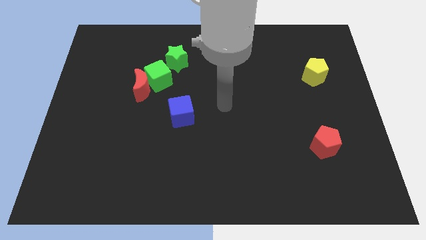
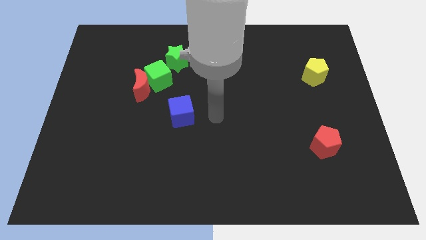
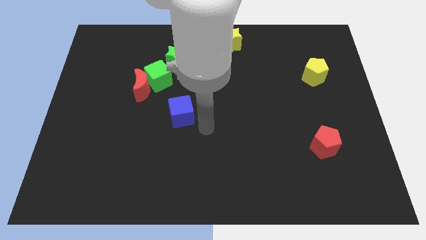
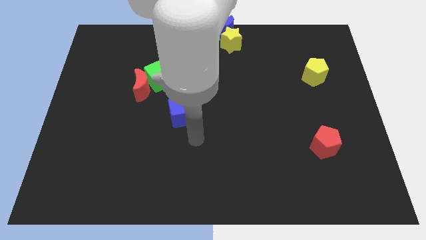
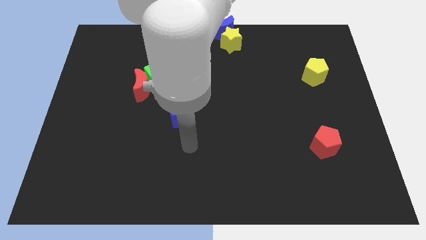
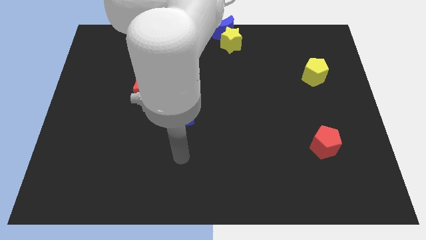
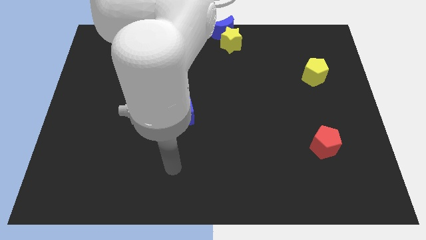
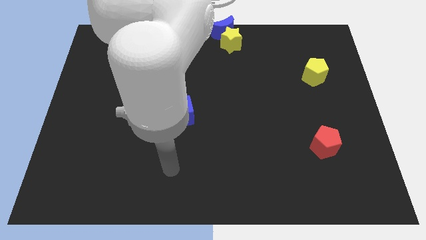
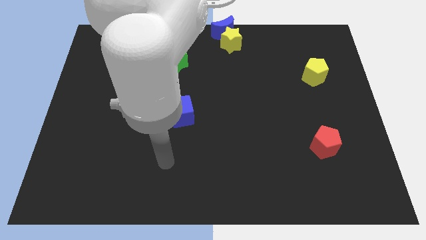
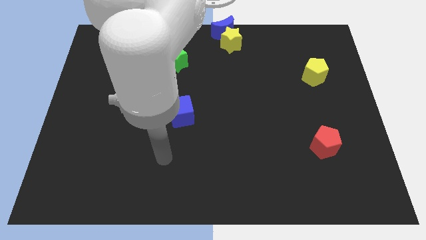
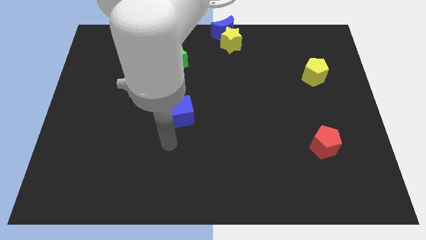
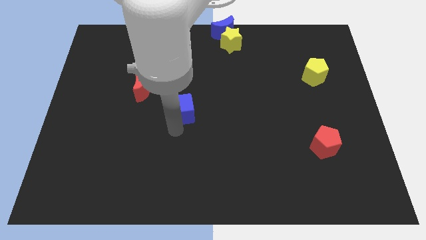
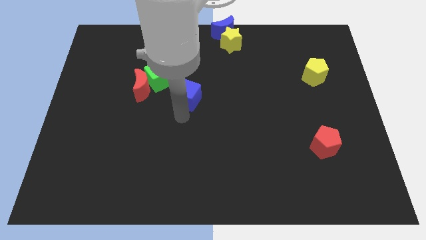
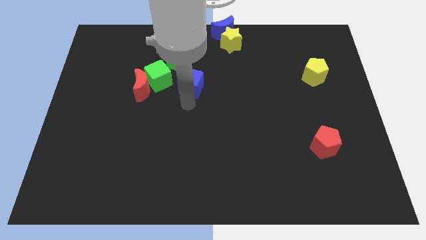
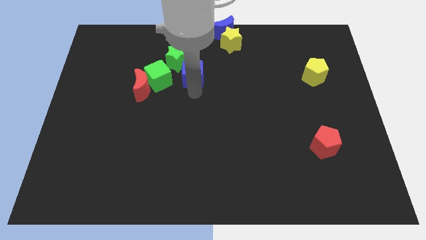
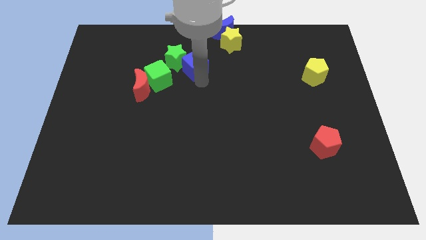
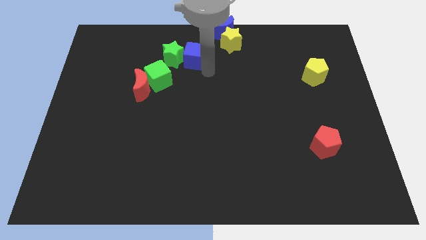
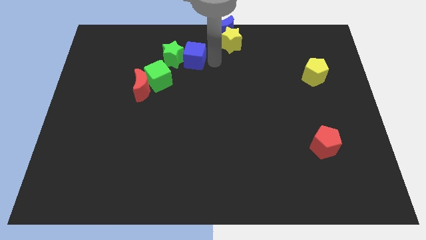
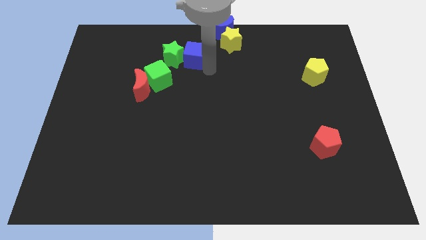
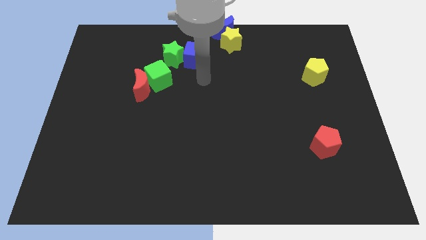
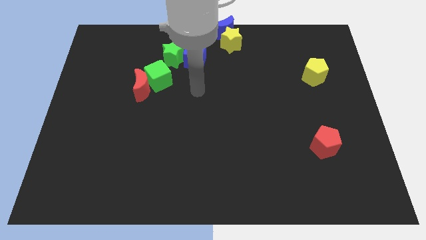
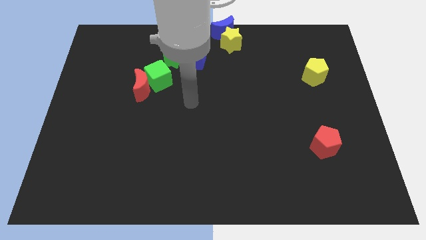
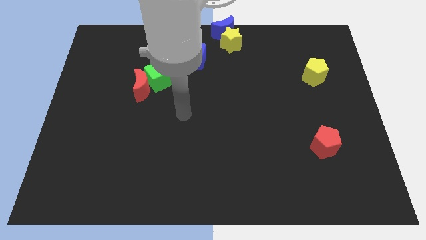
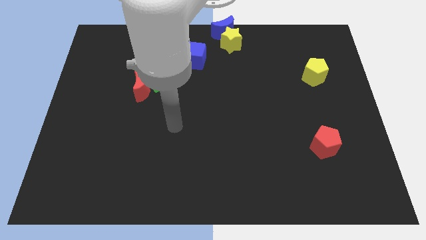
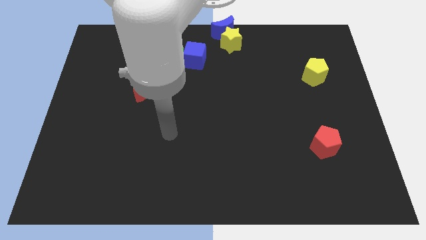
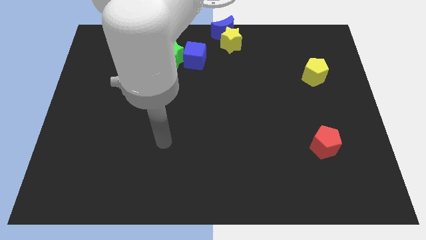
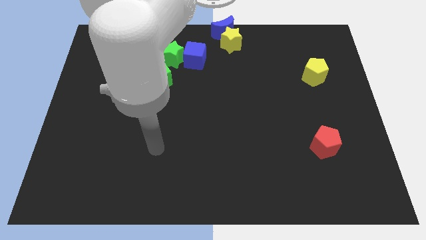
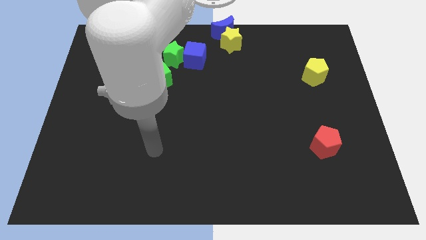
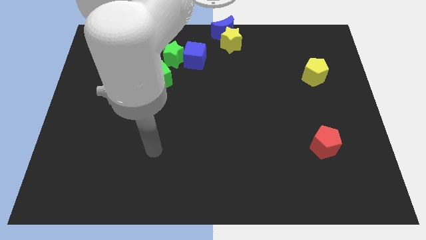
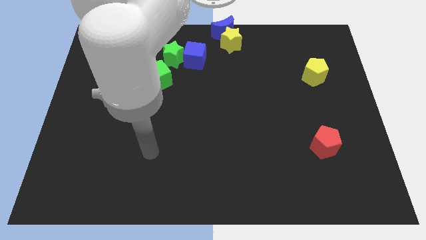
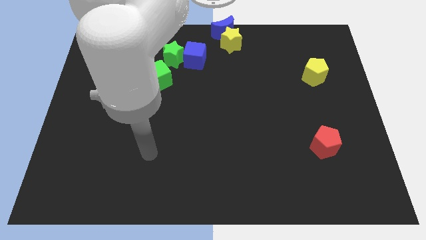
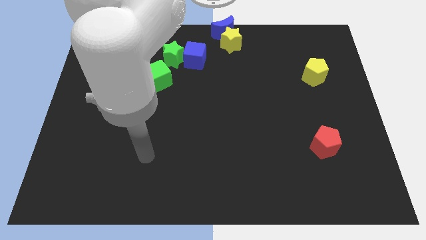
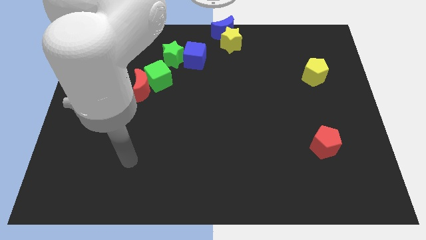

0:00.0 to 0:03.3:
push the blue cube towards the top center of the board

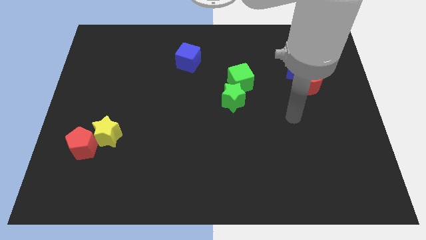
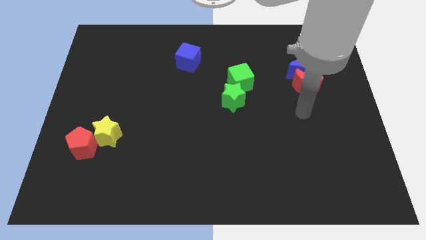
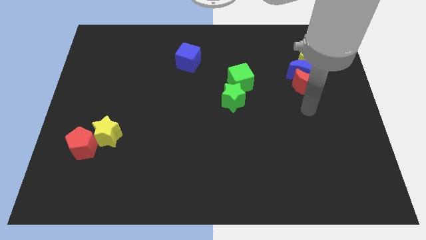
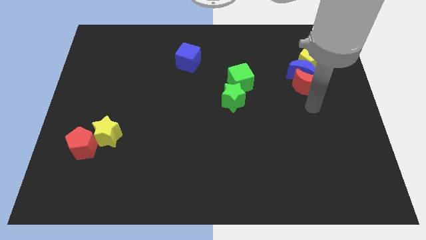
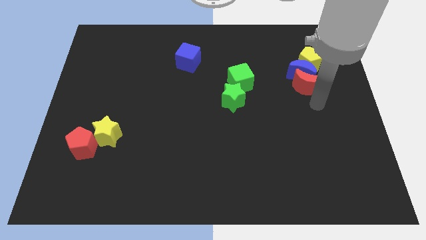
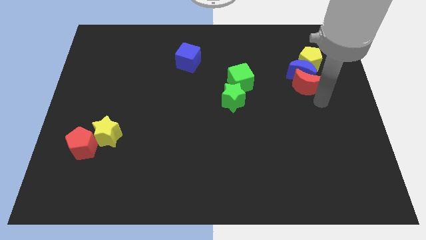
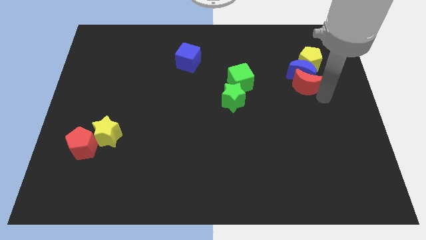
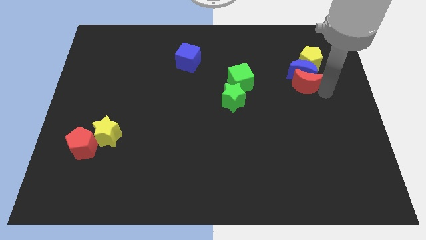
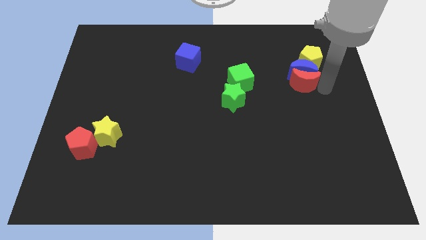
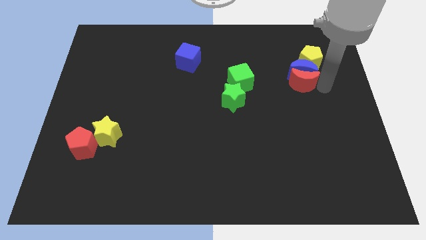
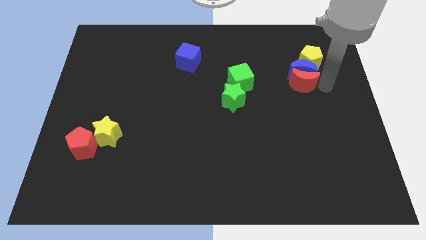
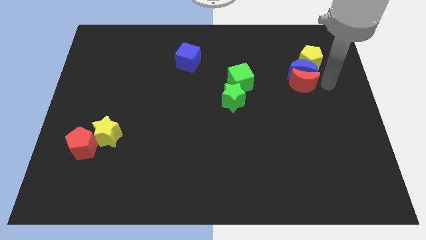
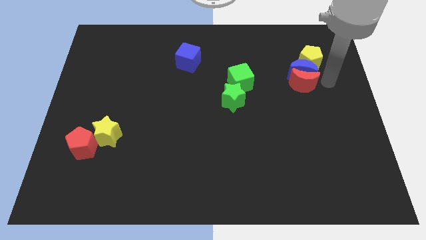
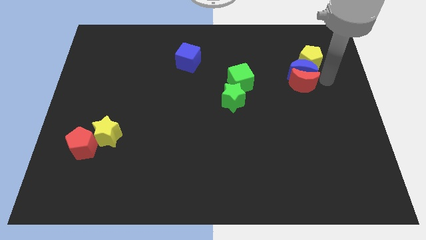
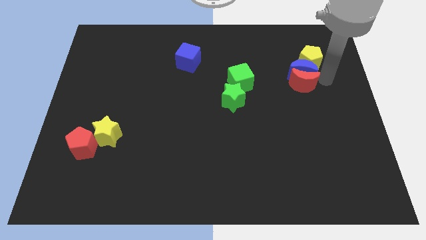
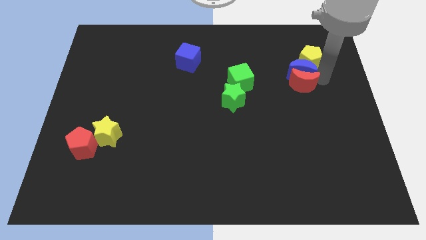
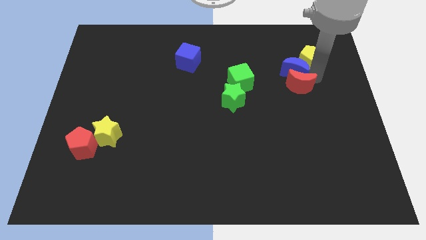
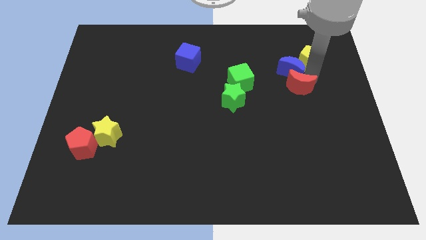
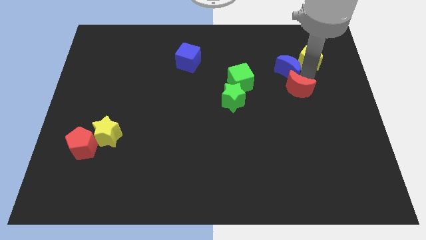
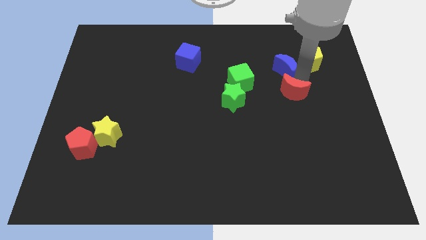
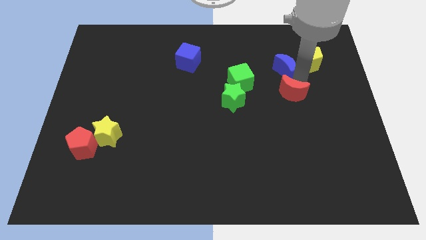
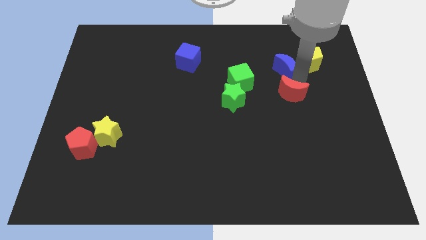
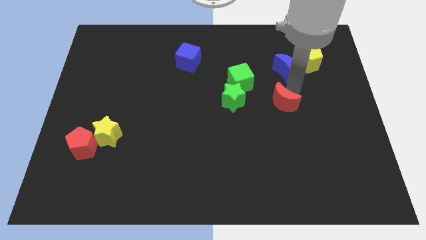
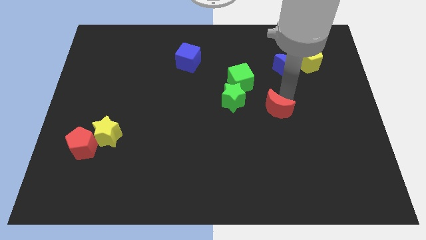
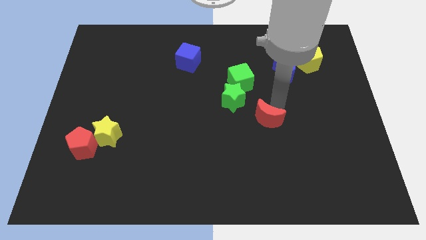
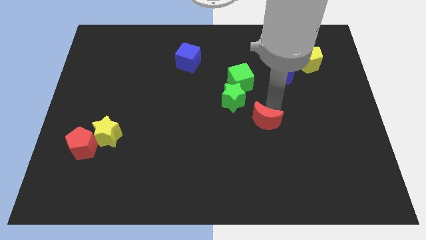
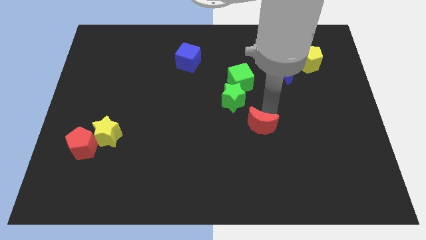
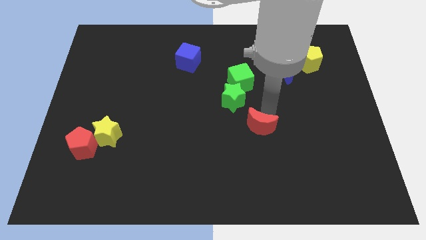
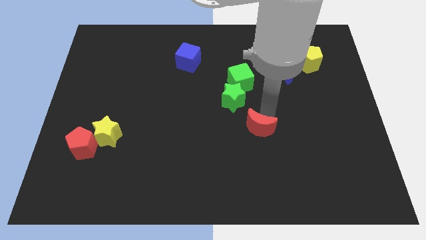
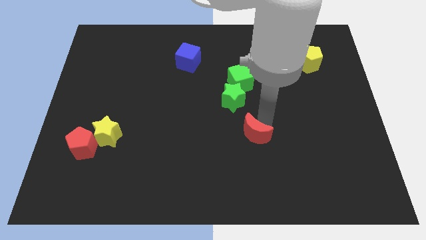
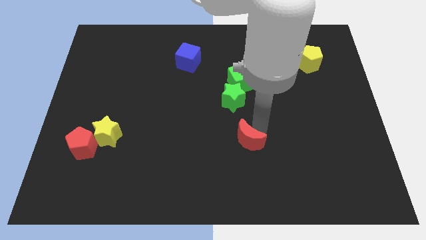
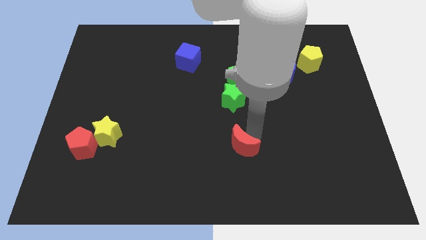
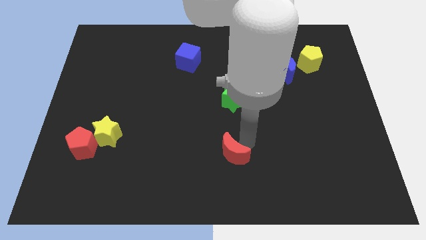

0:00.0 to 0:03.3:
push red moon to the bottom center

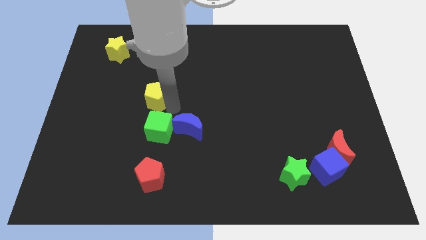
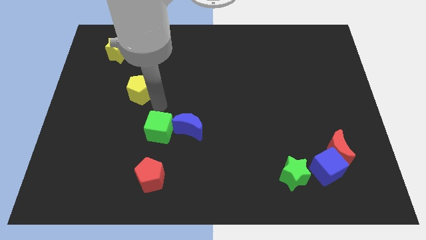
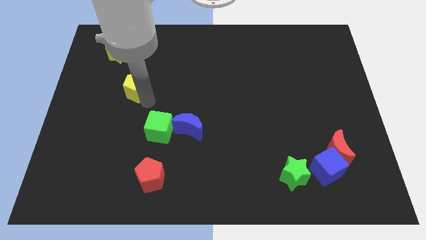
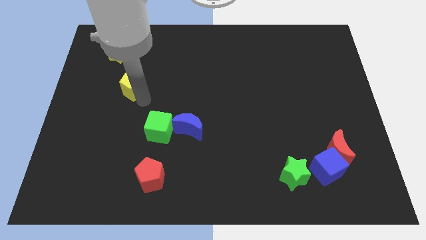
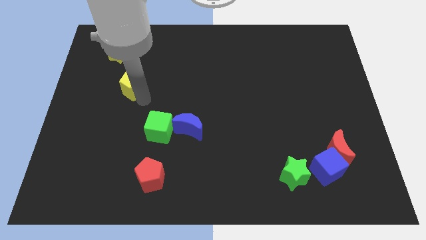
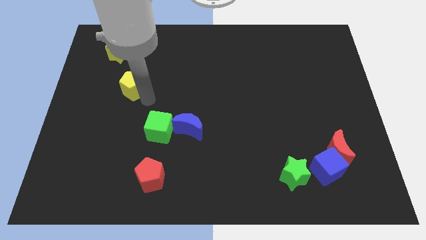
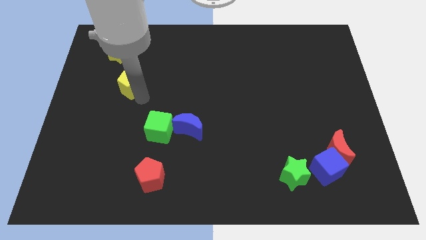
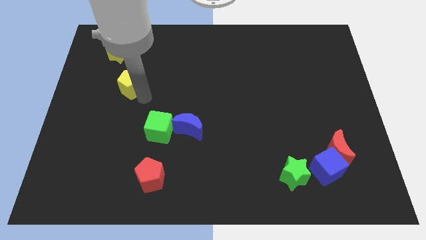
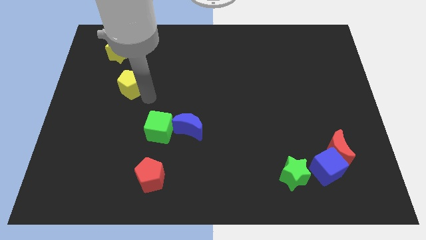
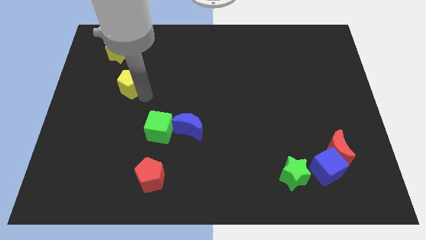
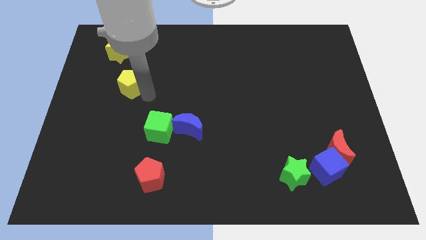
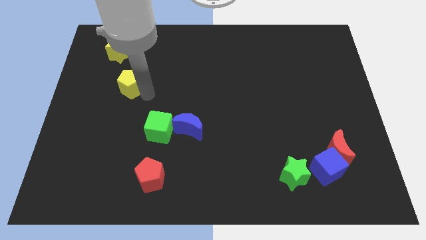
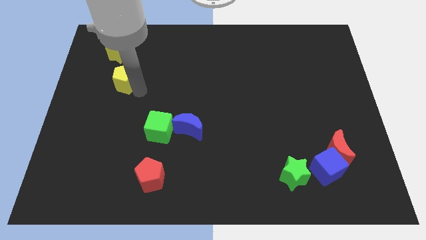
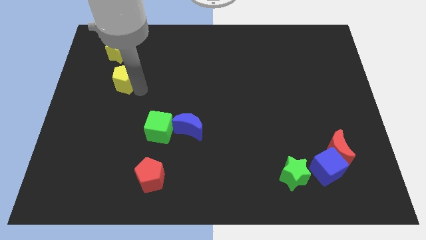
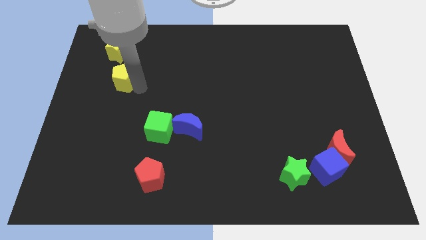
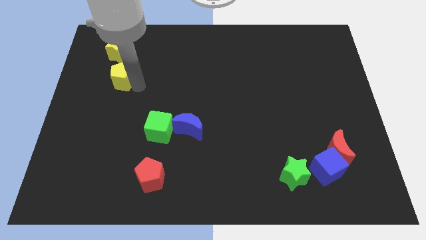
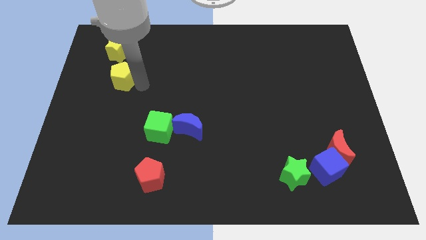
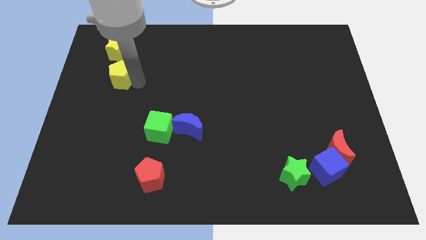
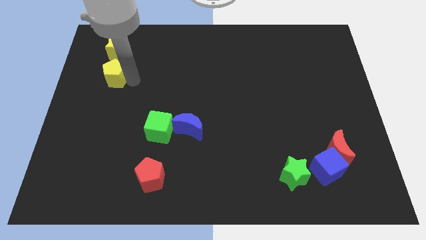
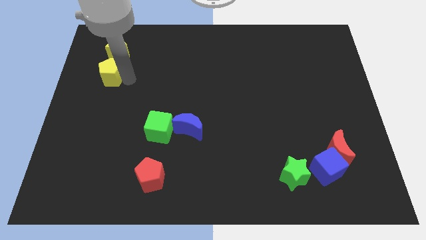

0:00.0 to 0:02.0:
push the yellow pentagon below the yellow star

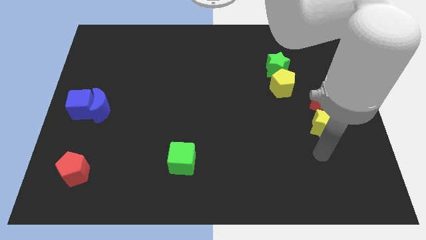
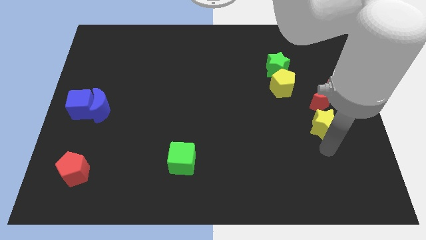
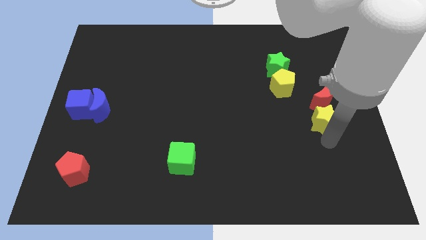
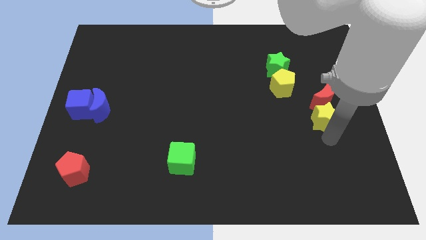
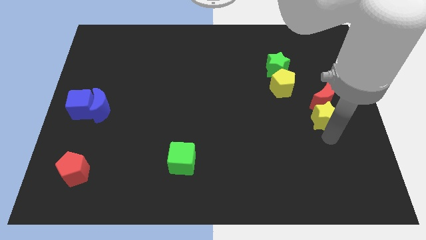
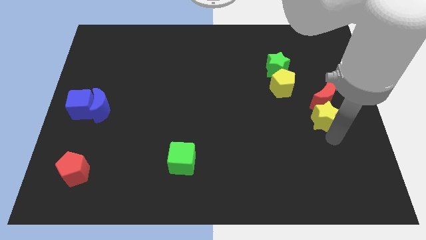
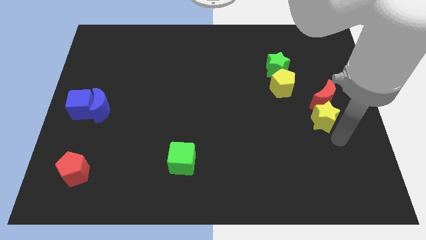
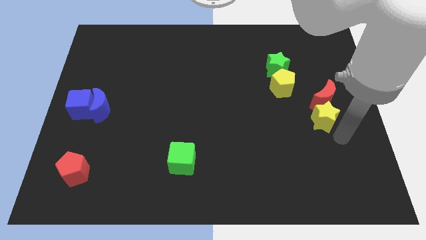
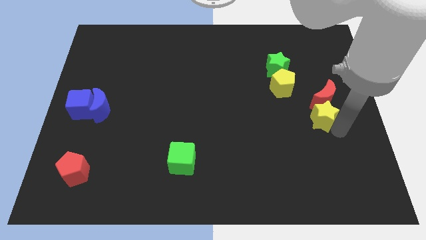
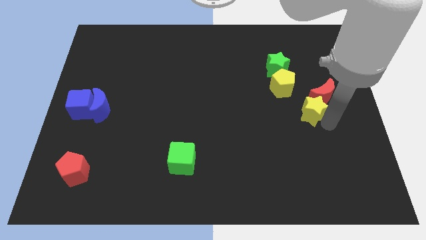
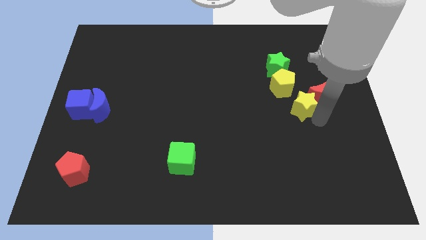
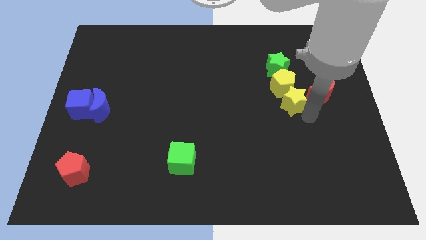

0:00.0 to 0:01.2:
push the yellow star into the red crescent
